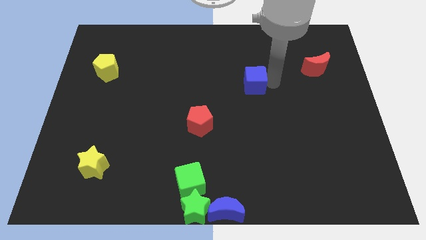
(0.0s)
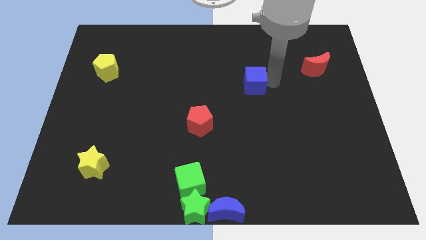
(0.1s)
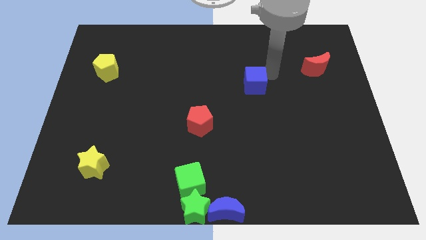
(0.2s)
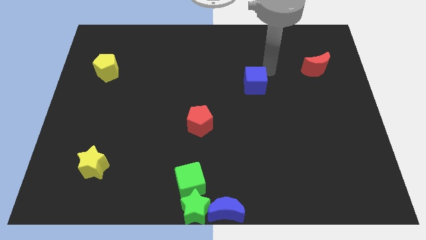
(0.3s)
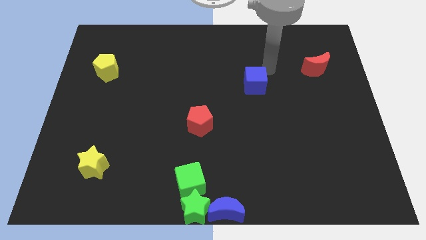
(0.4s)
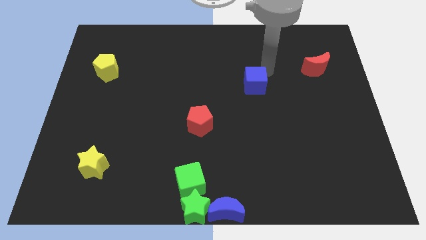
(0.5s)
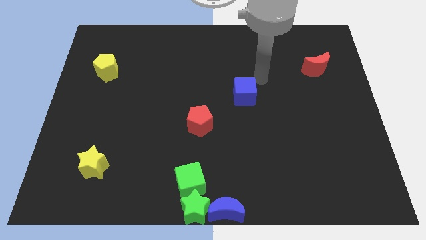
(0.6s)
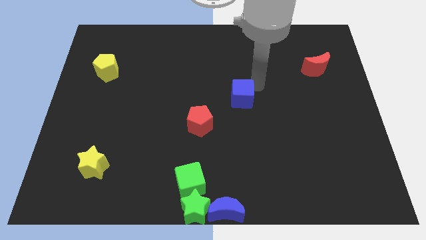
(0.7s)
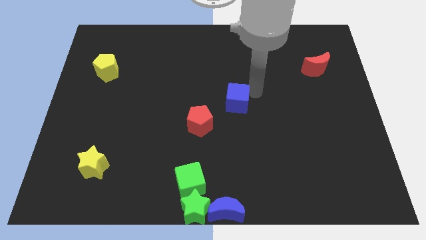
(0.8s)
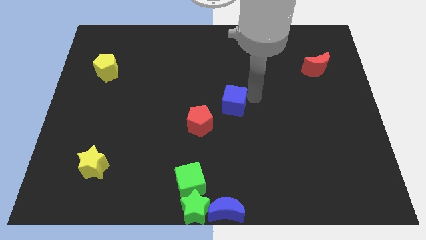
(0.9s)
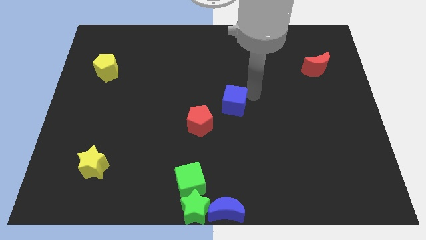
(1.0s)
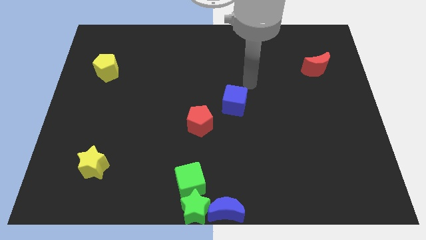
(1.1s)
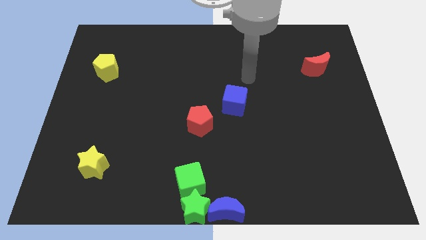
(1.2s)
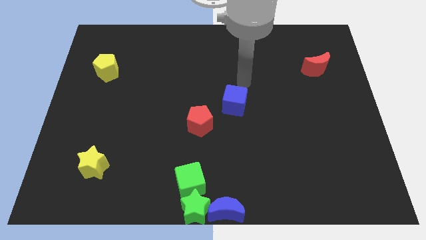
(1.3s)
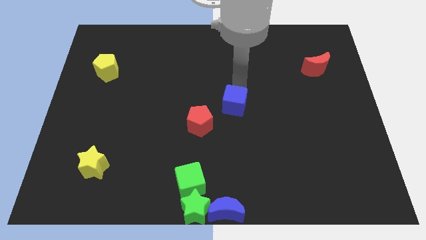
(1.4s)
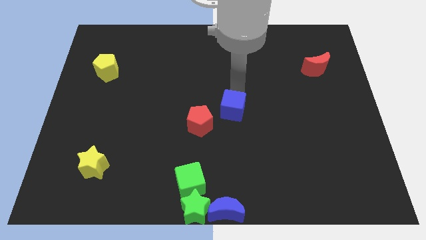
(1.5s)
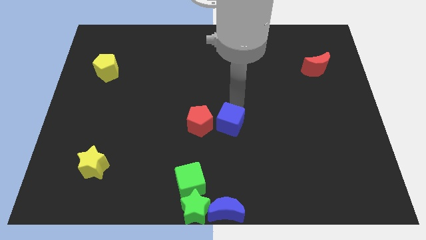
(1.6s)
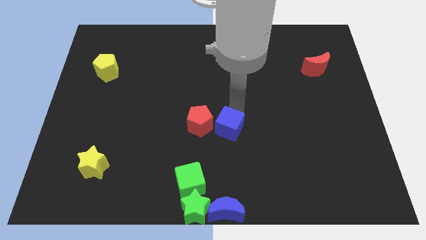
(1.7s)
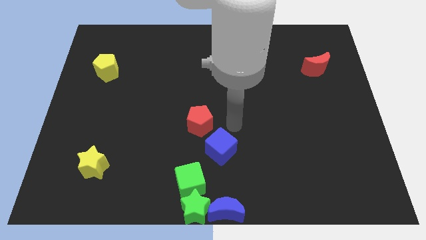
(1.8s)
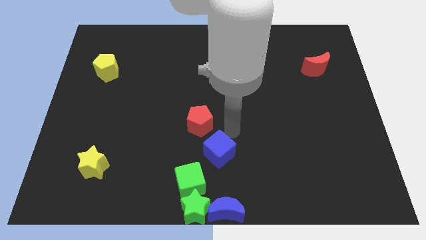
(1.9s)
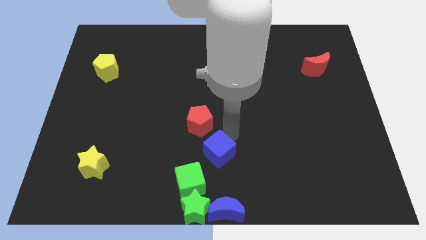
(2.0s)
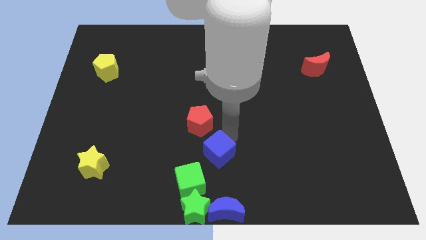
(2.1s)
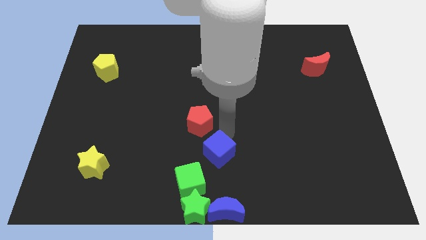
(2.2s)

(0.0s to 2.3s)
move the blue cube above the blue moon at the bottom

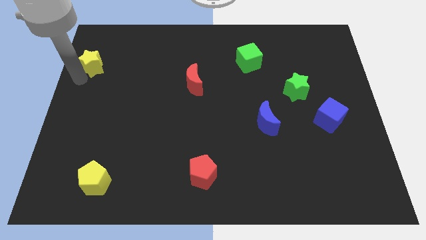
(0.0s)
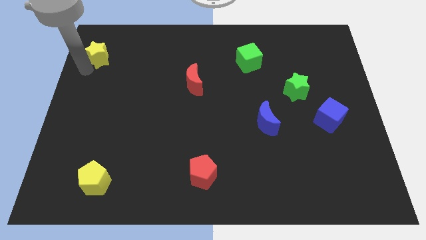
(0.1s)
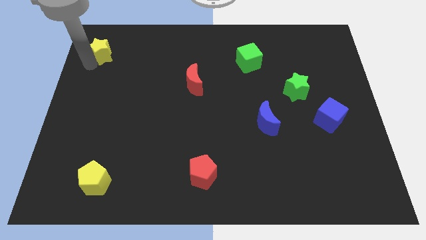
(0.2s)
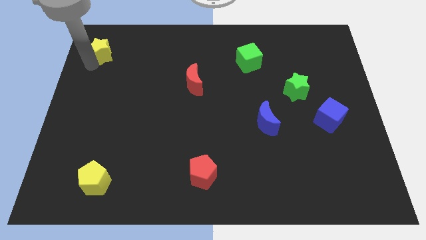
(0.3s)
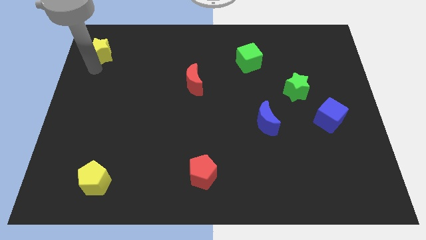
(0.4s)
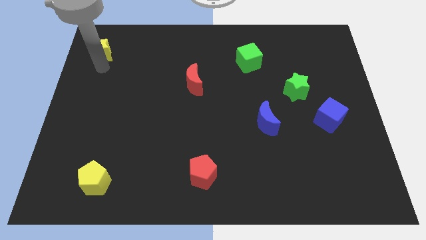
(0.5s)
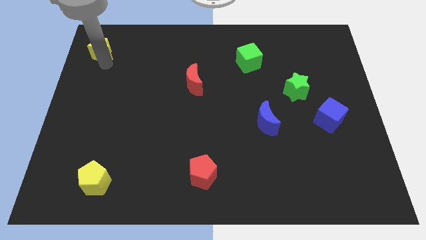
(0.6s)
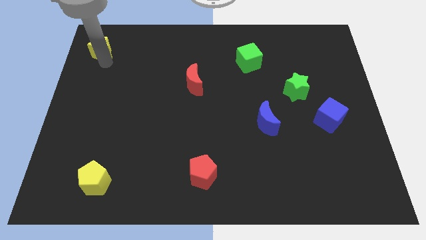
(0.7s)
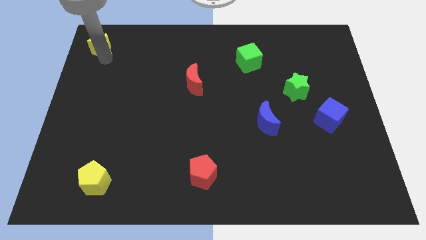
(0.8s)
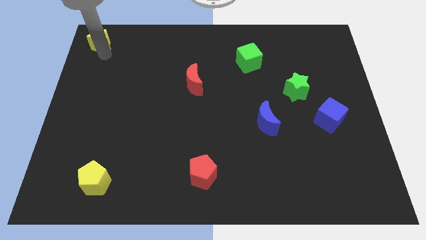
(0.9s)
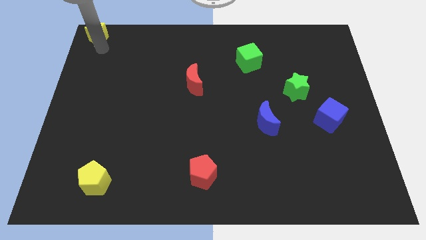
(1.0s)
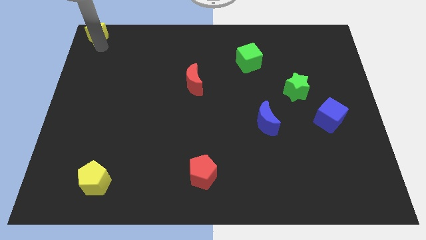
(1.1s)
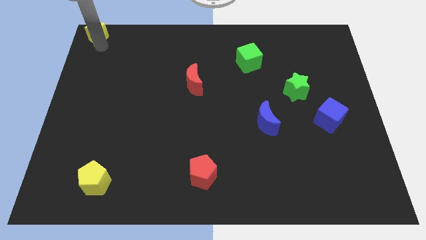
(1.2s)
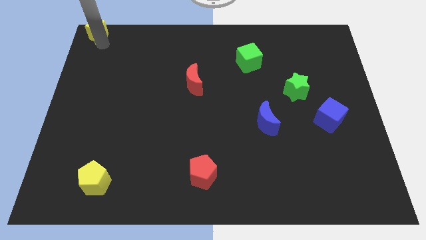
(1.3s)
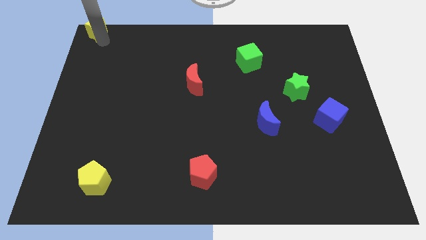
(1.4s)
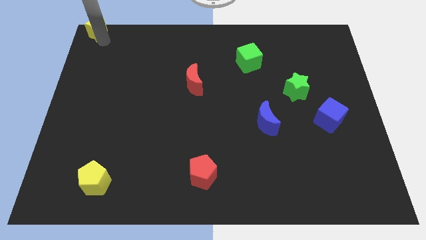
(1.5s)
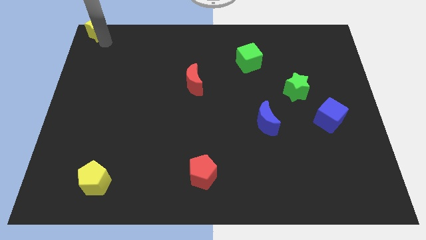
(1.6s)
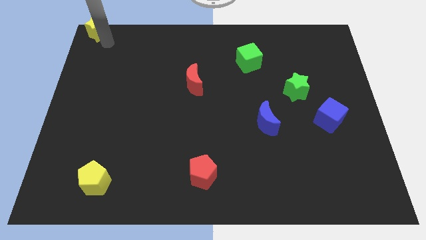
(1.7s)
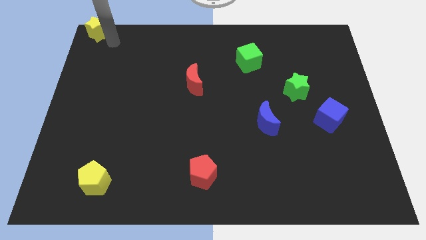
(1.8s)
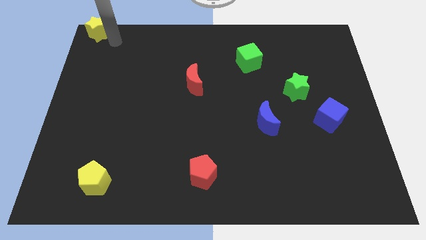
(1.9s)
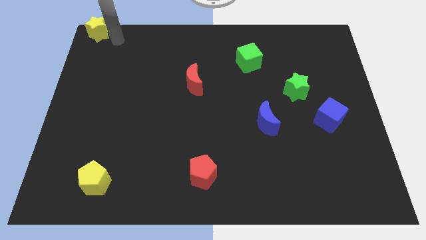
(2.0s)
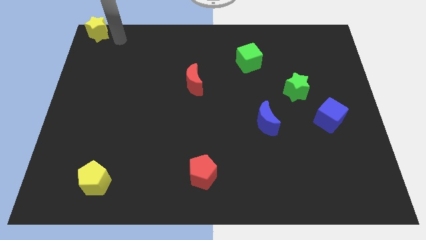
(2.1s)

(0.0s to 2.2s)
place yellow star to the top left of the board

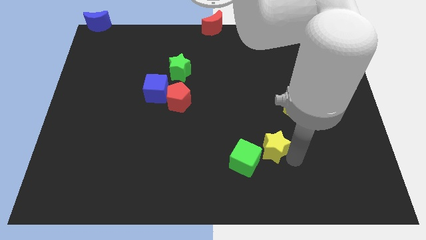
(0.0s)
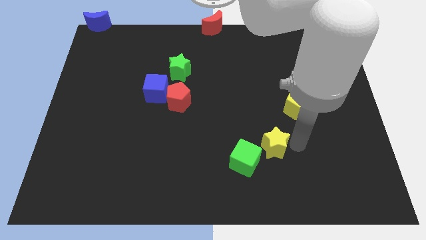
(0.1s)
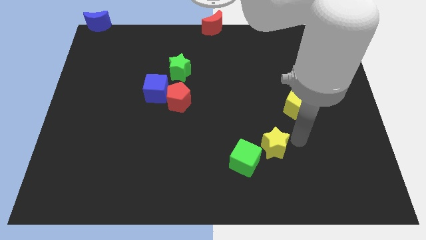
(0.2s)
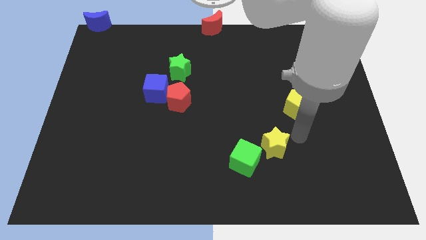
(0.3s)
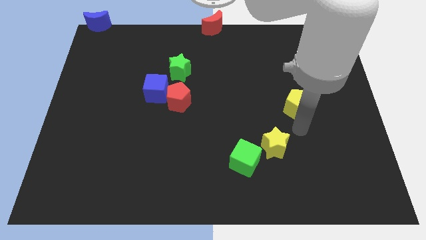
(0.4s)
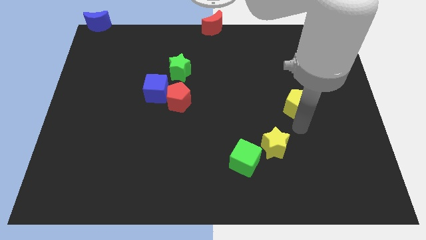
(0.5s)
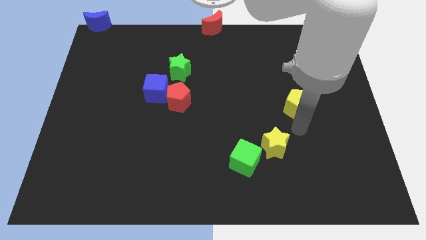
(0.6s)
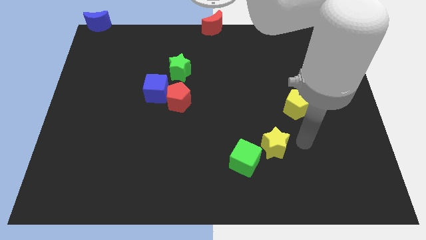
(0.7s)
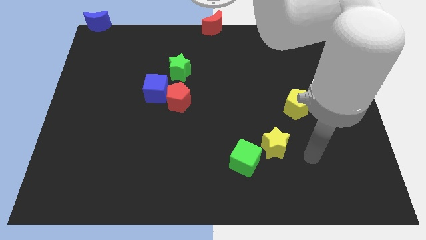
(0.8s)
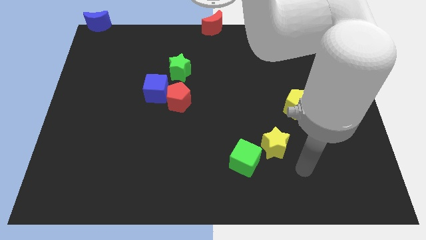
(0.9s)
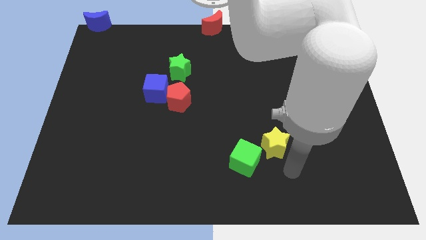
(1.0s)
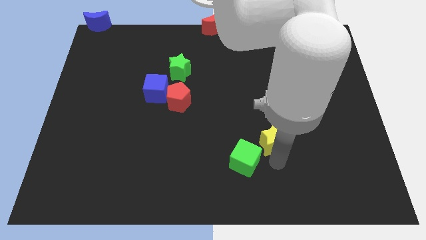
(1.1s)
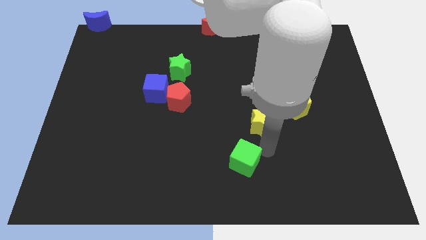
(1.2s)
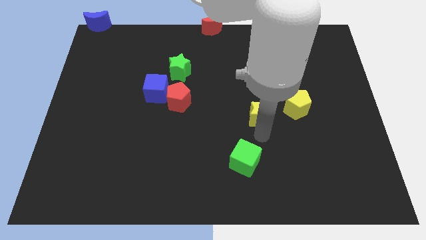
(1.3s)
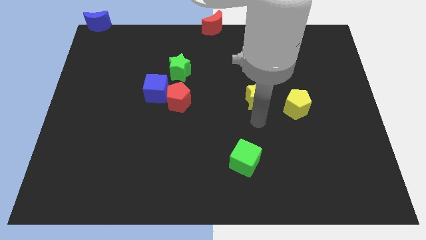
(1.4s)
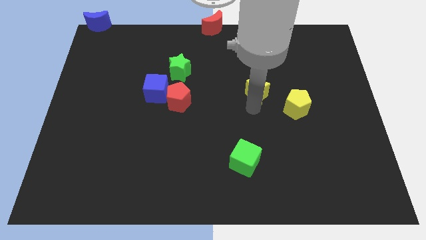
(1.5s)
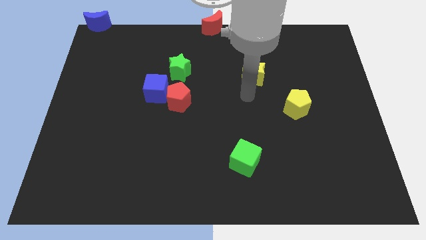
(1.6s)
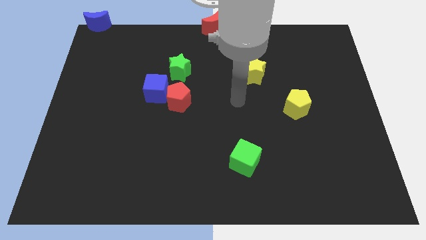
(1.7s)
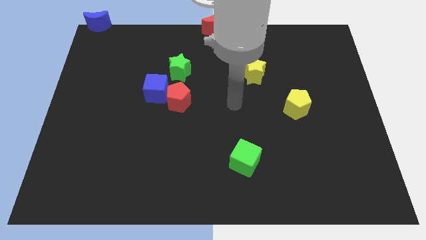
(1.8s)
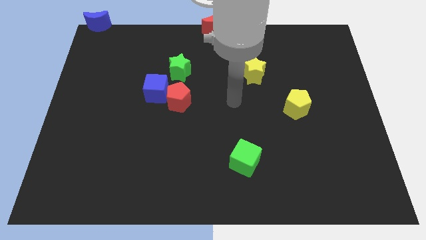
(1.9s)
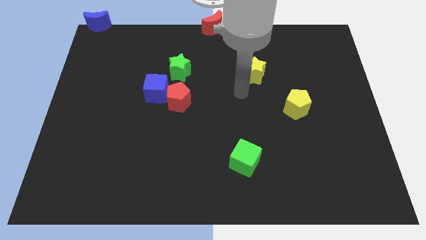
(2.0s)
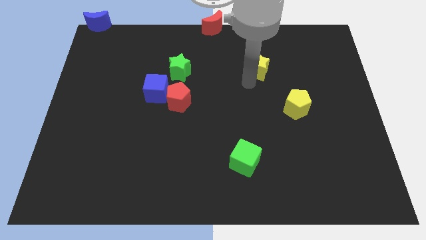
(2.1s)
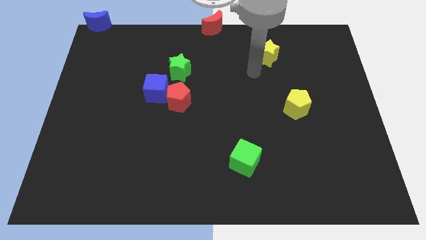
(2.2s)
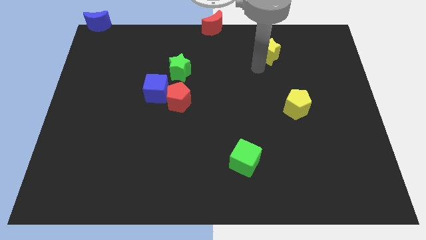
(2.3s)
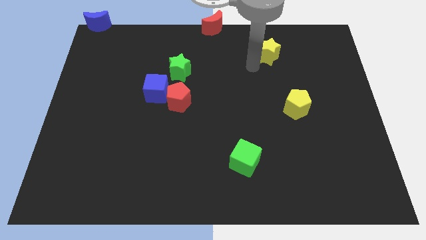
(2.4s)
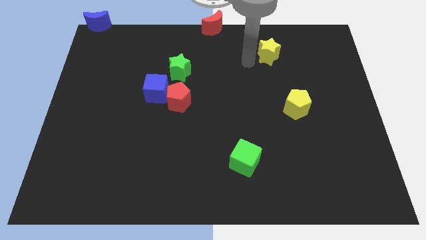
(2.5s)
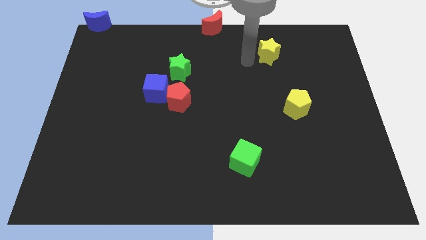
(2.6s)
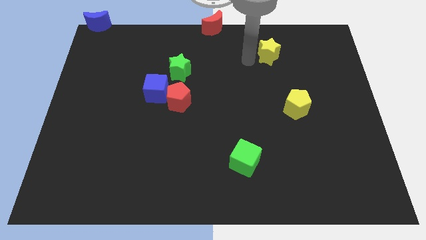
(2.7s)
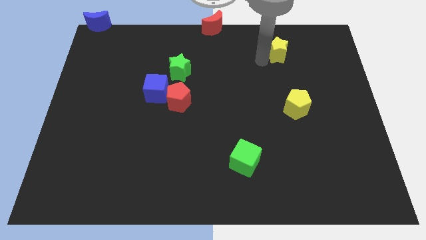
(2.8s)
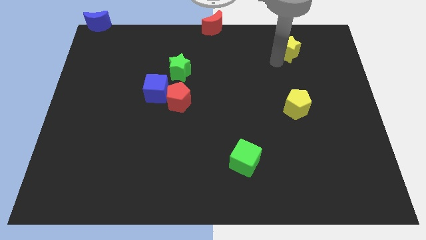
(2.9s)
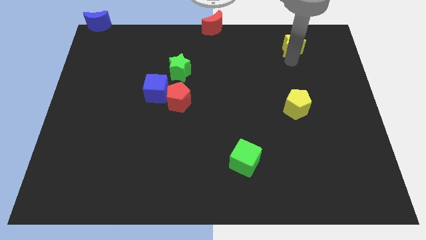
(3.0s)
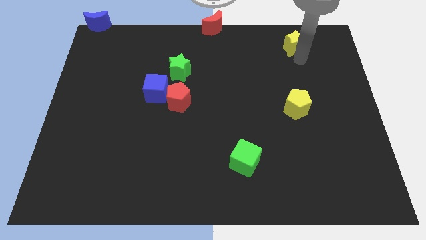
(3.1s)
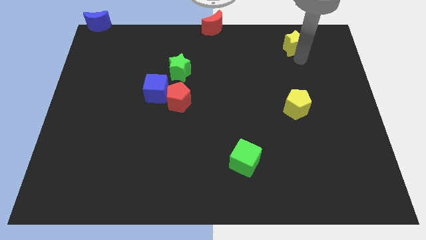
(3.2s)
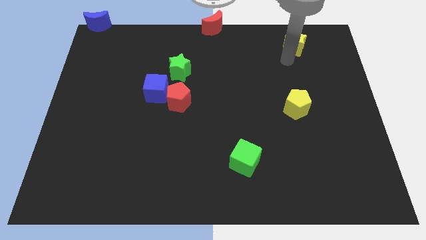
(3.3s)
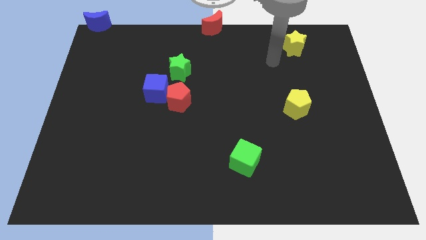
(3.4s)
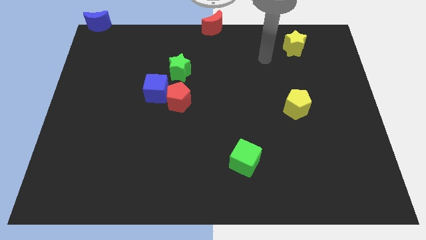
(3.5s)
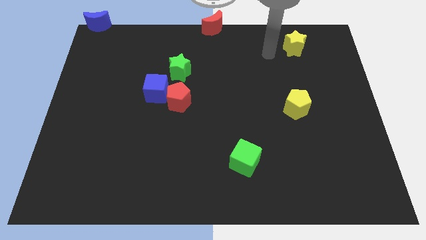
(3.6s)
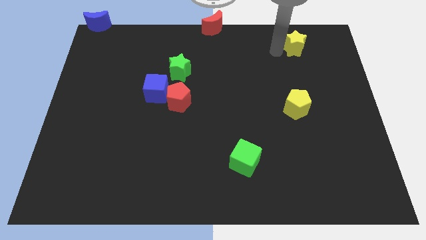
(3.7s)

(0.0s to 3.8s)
move the yellow star towards the top right of the board

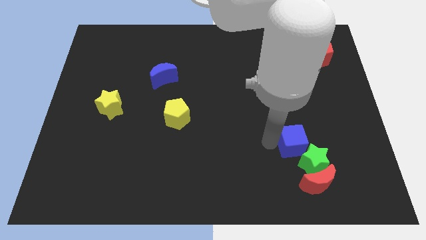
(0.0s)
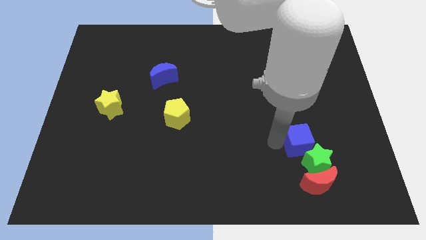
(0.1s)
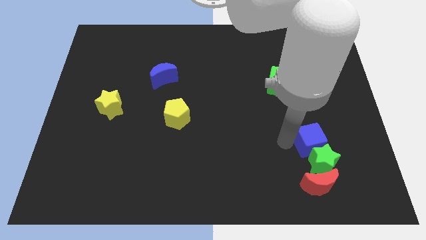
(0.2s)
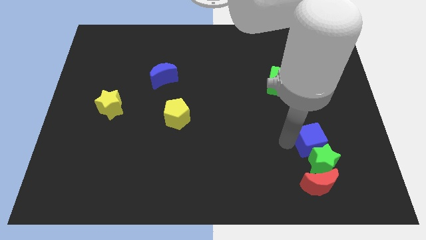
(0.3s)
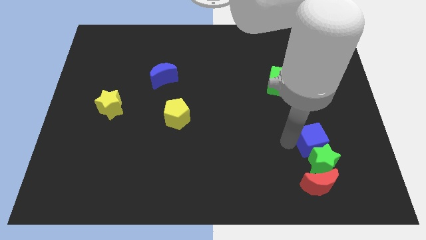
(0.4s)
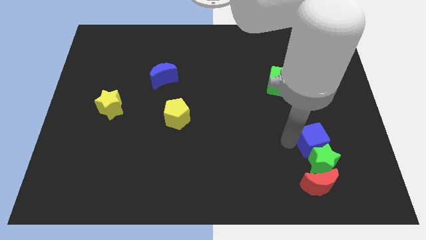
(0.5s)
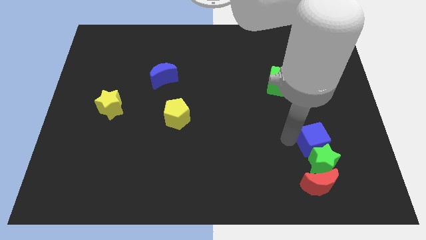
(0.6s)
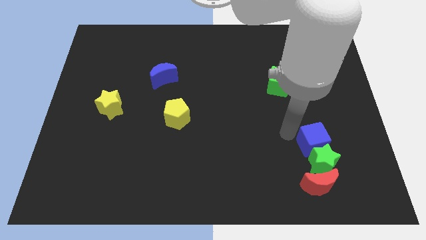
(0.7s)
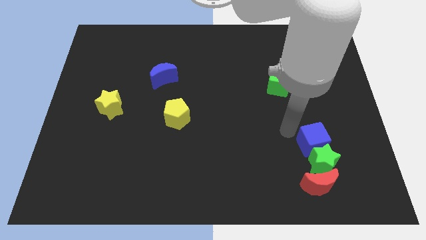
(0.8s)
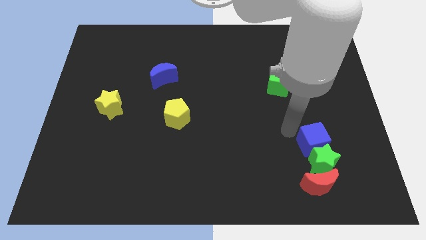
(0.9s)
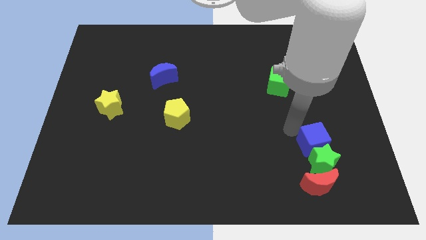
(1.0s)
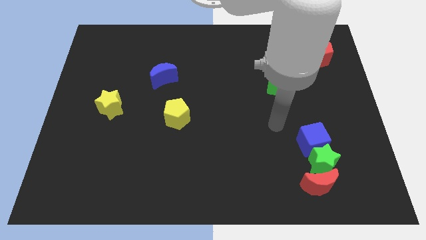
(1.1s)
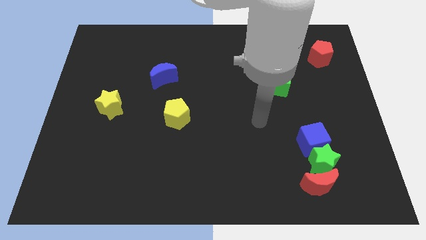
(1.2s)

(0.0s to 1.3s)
slide the blue cube into the green star
